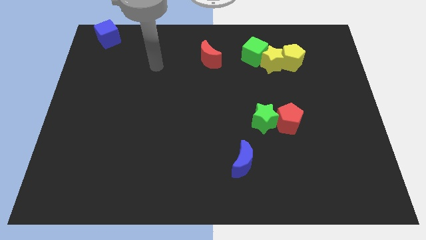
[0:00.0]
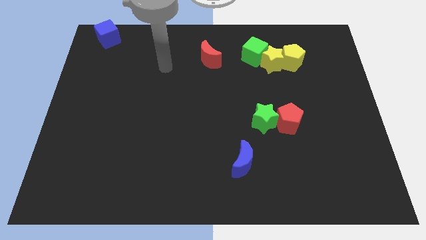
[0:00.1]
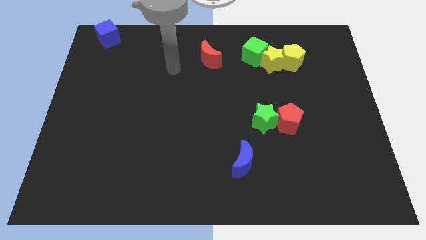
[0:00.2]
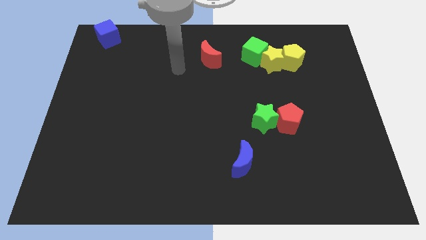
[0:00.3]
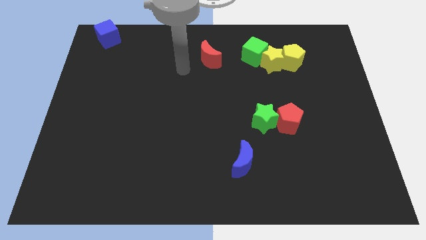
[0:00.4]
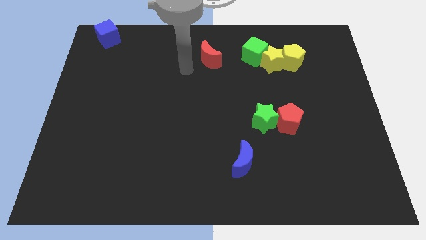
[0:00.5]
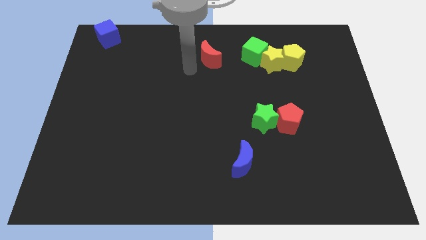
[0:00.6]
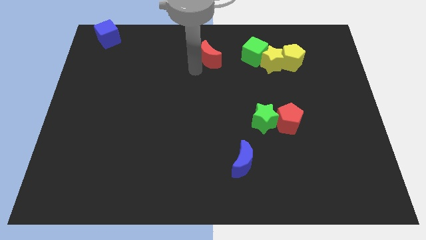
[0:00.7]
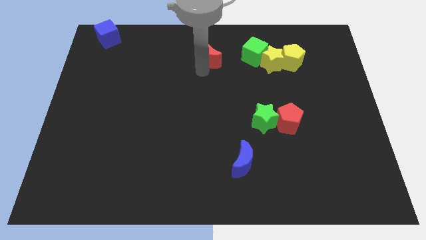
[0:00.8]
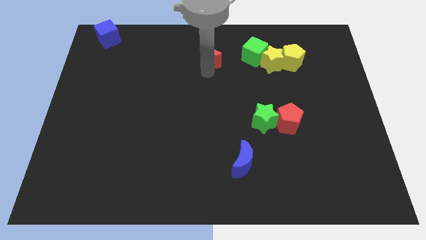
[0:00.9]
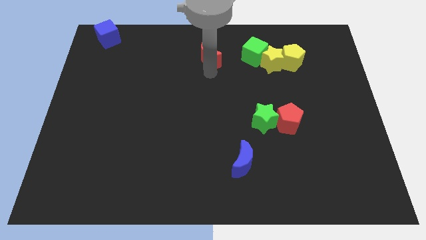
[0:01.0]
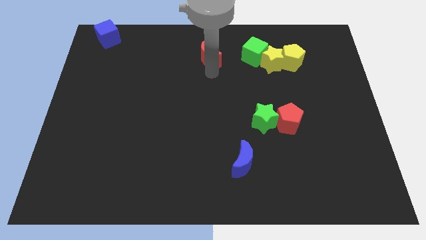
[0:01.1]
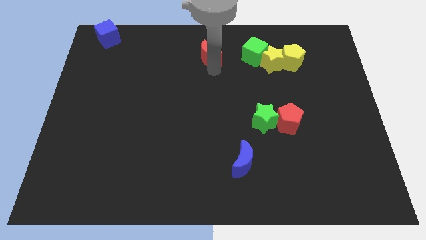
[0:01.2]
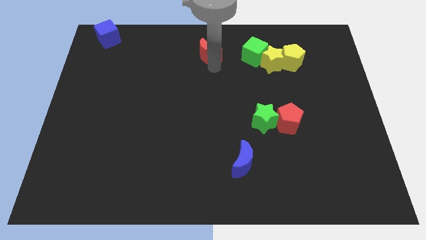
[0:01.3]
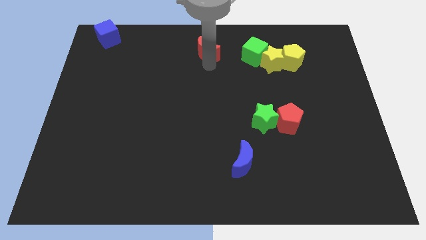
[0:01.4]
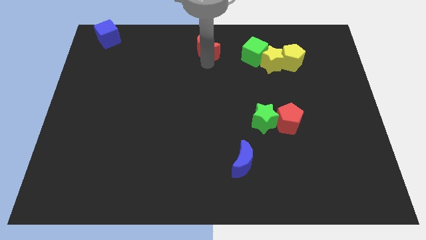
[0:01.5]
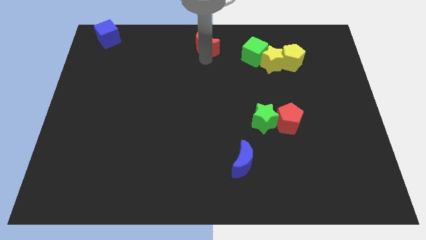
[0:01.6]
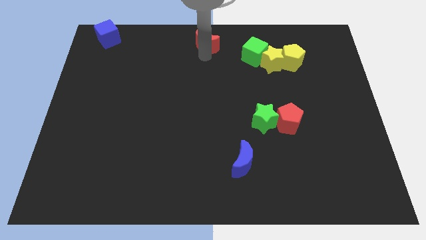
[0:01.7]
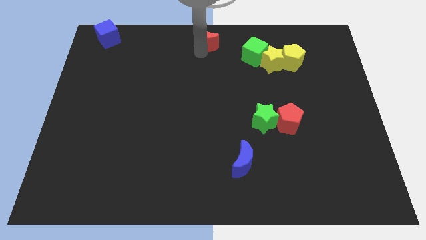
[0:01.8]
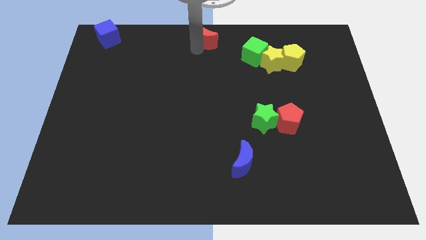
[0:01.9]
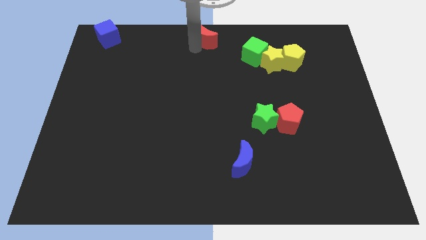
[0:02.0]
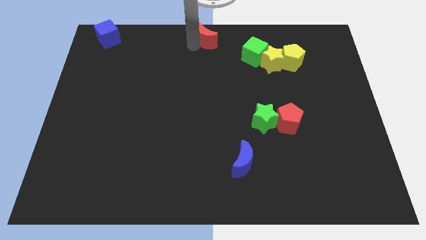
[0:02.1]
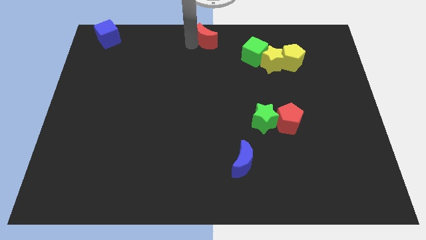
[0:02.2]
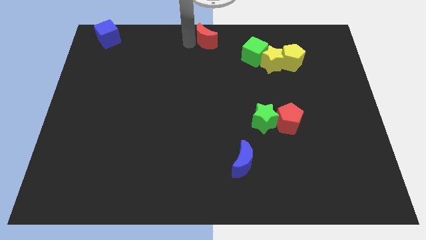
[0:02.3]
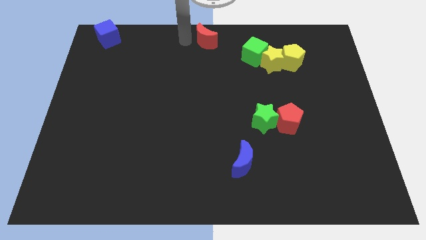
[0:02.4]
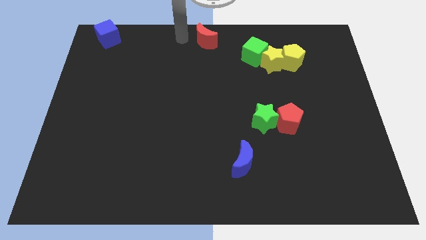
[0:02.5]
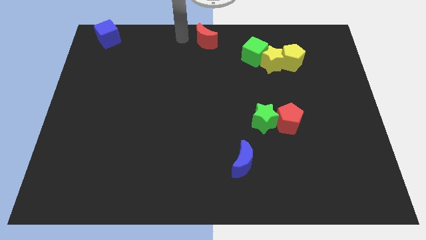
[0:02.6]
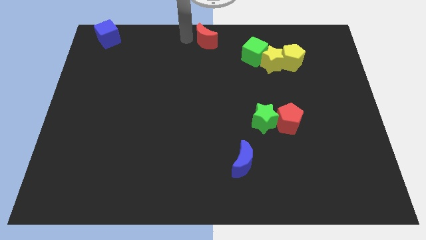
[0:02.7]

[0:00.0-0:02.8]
push the red moon to the top center

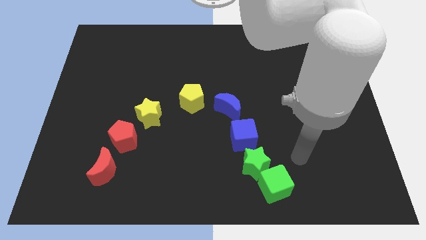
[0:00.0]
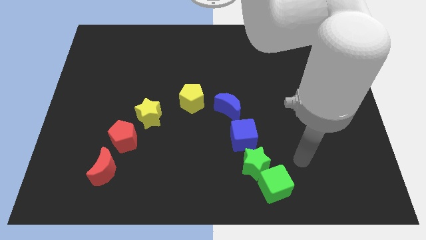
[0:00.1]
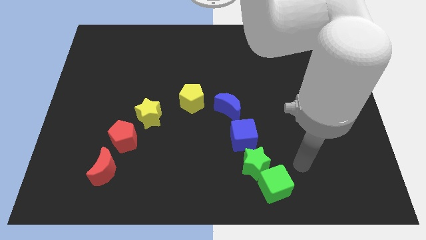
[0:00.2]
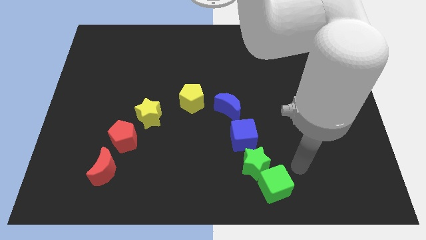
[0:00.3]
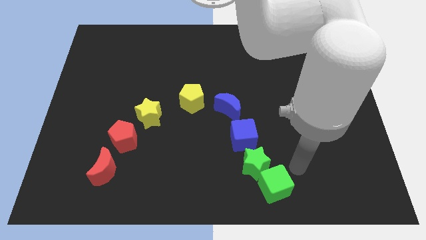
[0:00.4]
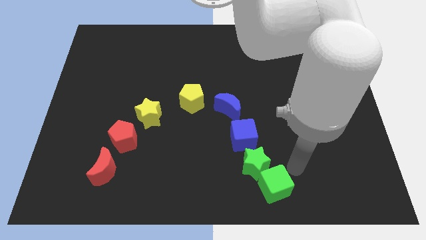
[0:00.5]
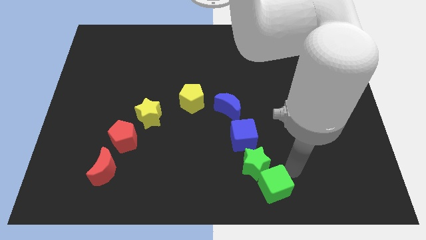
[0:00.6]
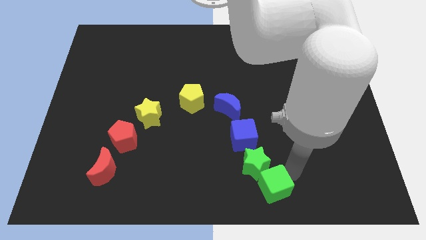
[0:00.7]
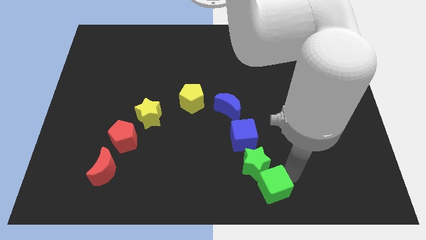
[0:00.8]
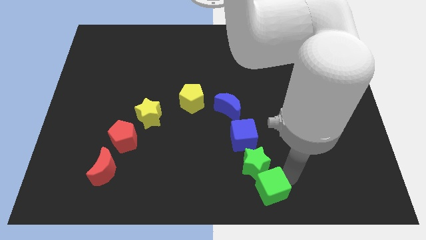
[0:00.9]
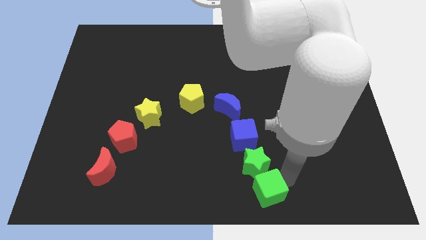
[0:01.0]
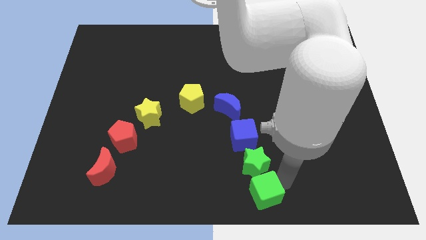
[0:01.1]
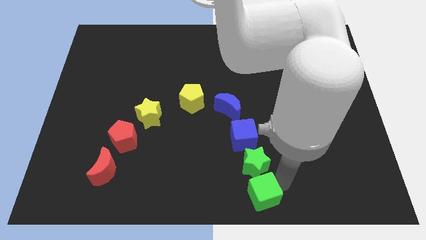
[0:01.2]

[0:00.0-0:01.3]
place the green cube underneath to the green star

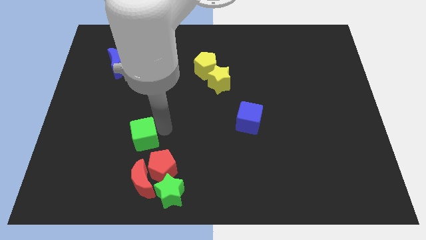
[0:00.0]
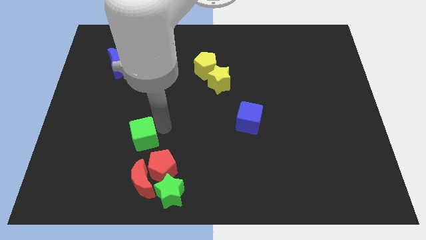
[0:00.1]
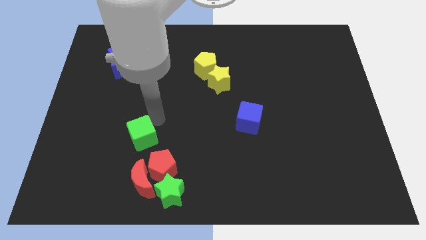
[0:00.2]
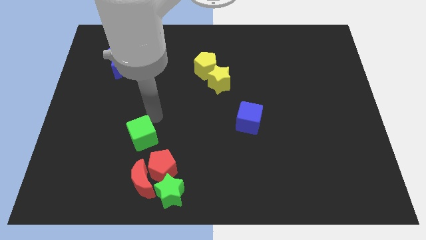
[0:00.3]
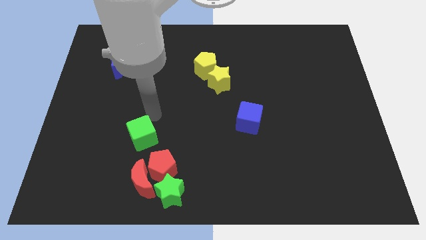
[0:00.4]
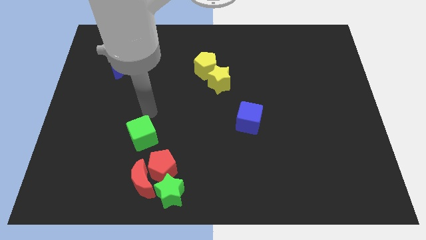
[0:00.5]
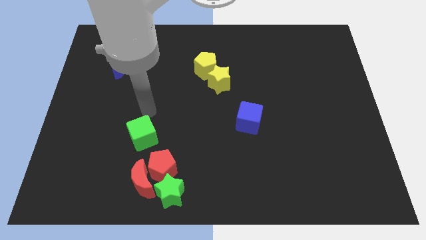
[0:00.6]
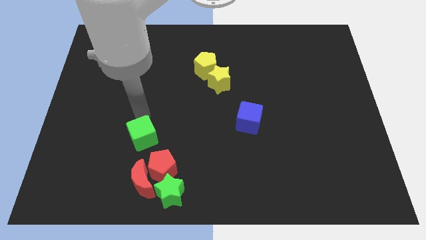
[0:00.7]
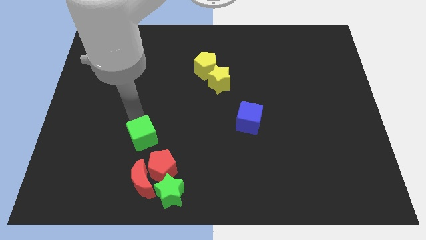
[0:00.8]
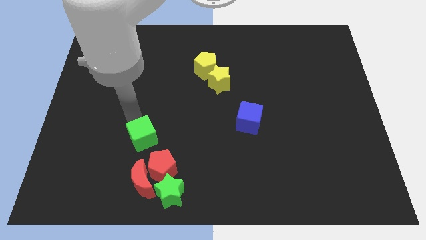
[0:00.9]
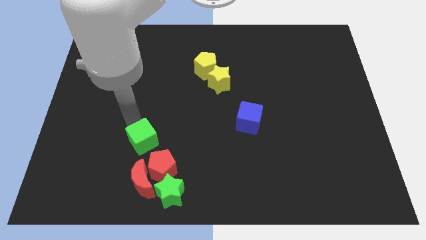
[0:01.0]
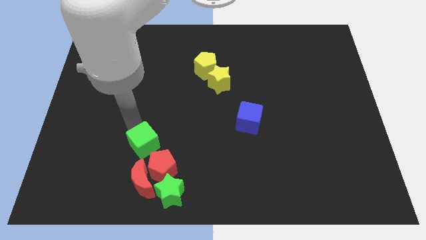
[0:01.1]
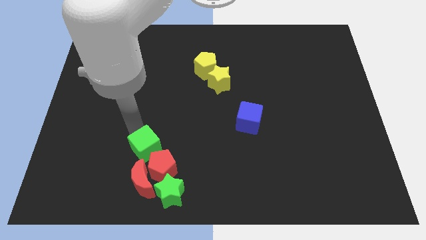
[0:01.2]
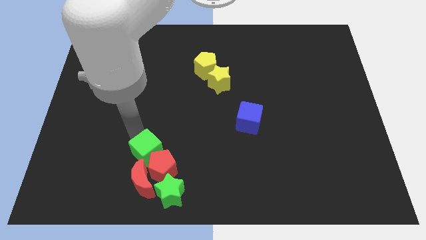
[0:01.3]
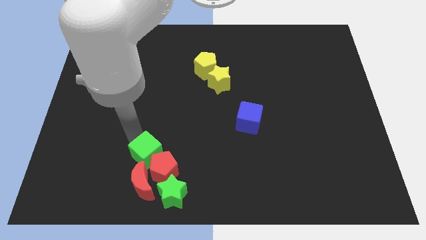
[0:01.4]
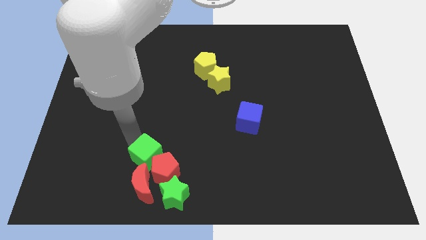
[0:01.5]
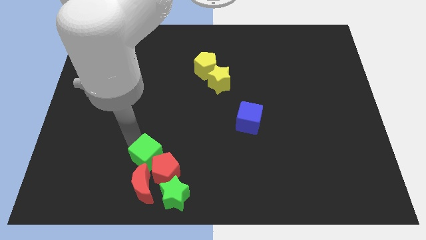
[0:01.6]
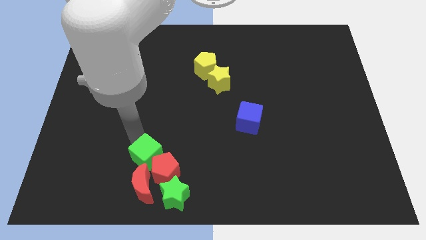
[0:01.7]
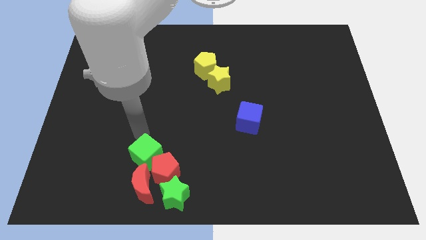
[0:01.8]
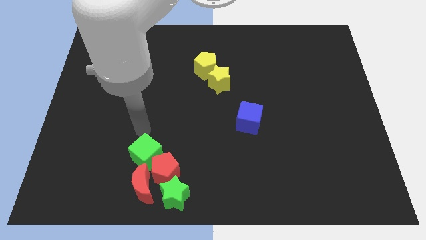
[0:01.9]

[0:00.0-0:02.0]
add the green cube to the group of blocks

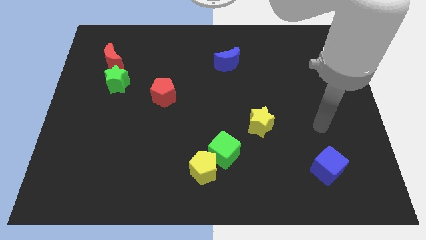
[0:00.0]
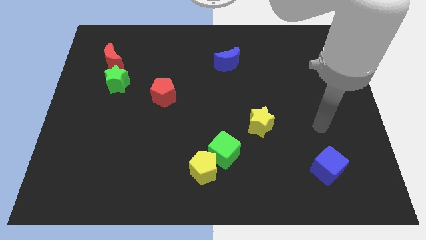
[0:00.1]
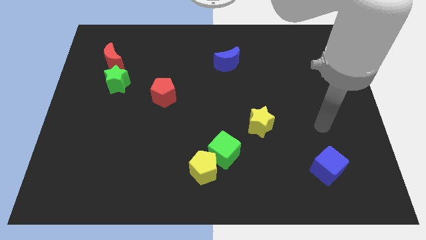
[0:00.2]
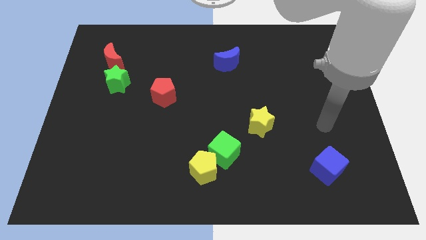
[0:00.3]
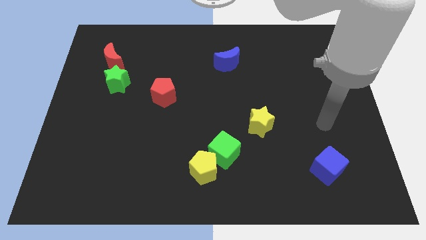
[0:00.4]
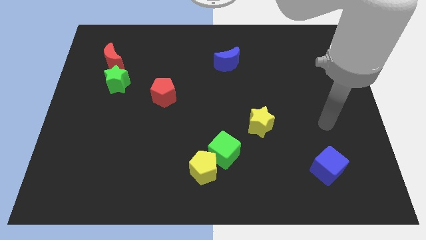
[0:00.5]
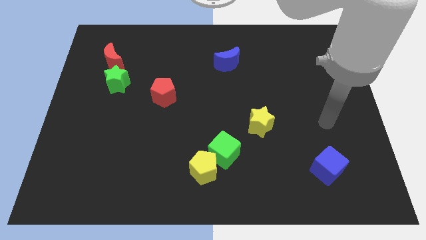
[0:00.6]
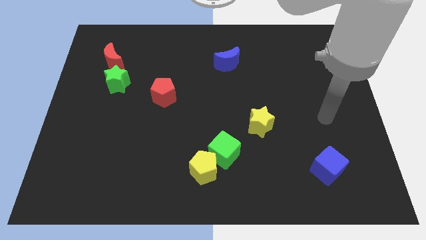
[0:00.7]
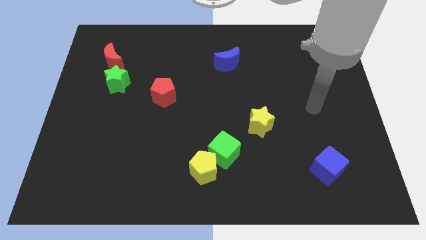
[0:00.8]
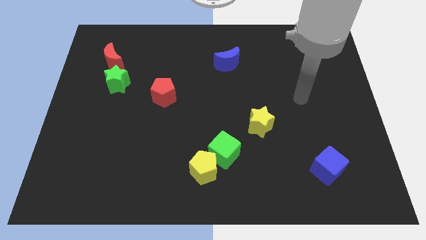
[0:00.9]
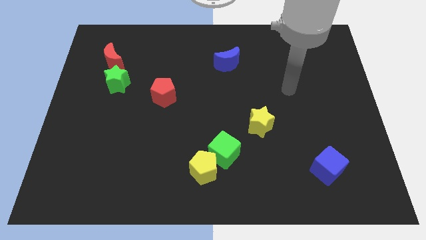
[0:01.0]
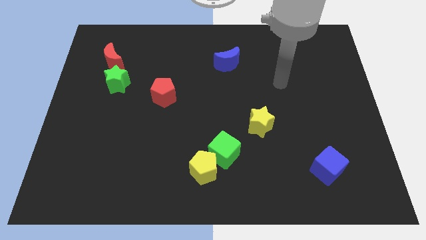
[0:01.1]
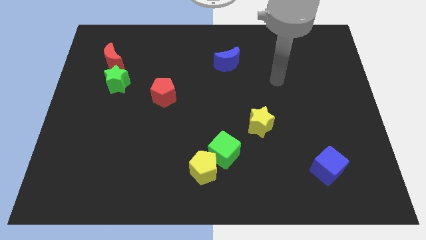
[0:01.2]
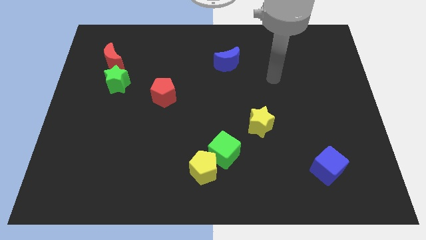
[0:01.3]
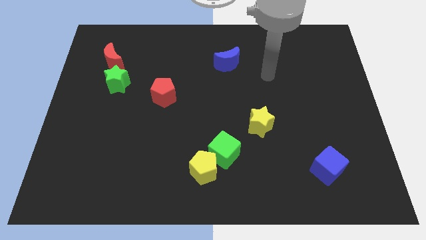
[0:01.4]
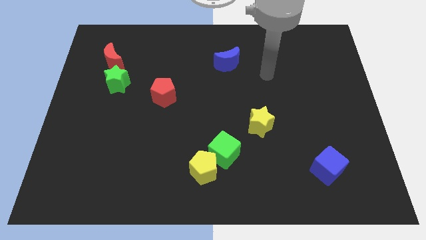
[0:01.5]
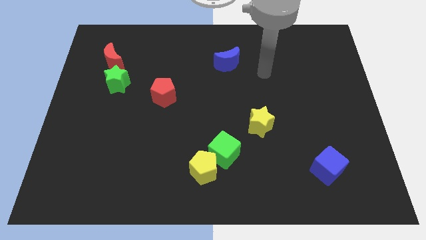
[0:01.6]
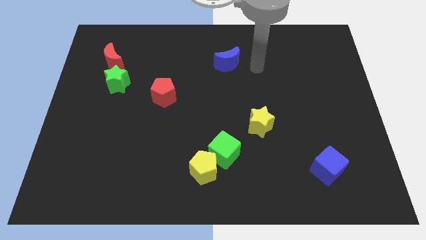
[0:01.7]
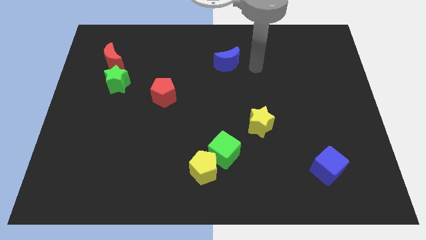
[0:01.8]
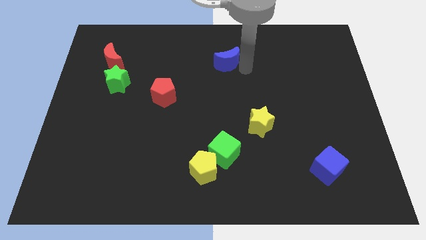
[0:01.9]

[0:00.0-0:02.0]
move your arm towards the blue crescent

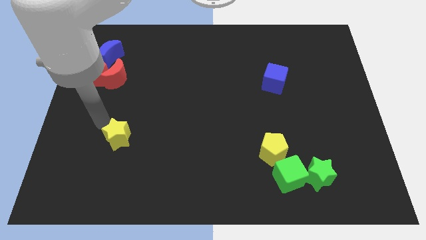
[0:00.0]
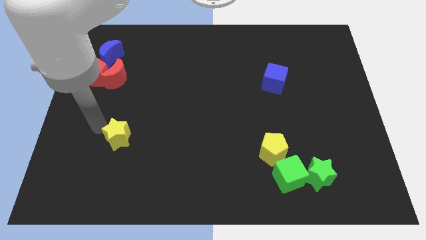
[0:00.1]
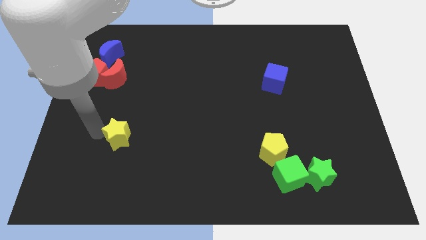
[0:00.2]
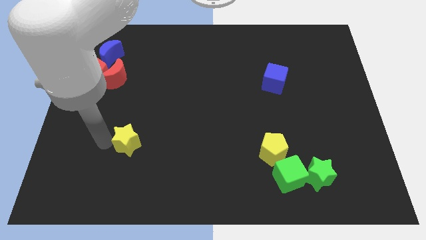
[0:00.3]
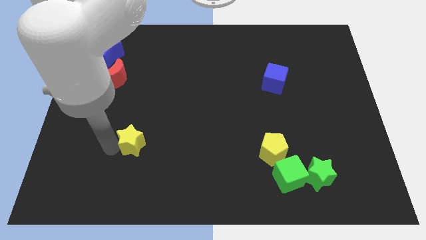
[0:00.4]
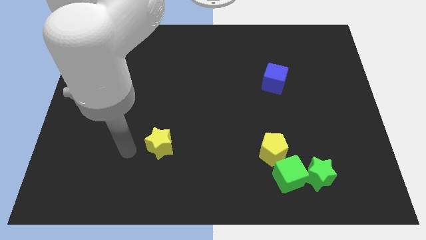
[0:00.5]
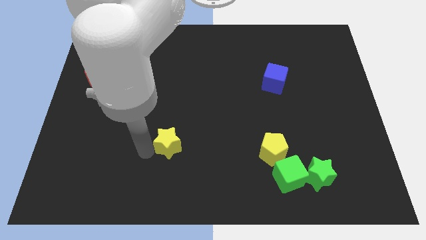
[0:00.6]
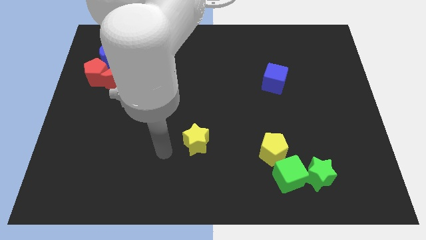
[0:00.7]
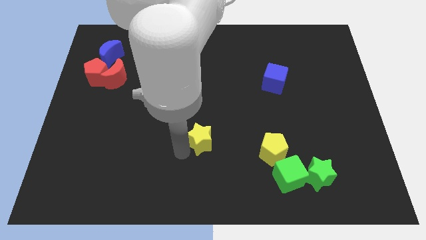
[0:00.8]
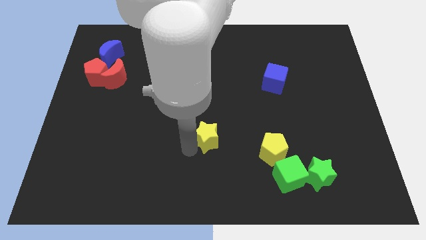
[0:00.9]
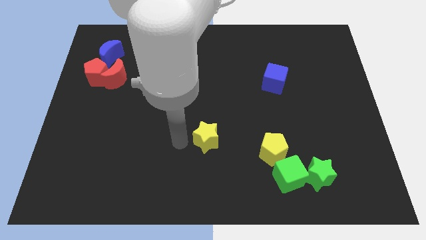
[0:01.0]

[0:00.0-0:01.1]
slide yellow star slightly to the right
